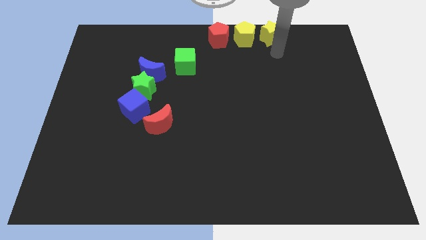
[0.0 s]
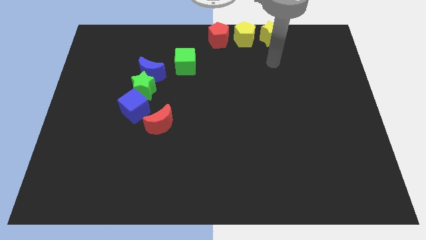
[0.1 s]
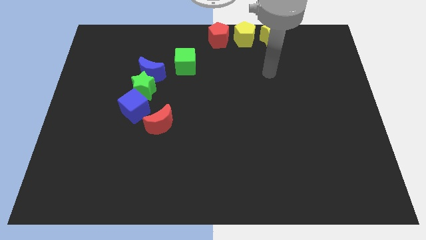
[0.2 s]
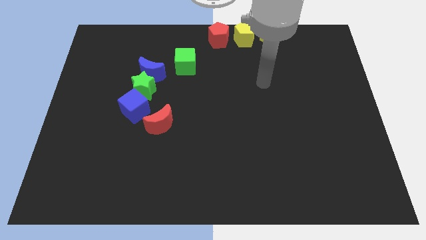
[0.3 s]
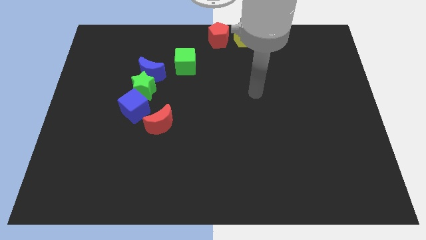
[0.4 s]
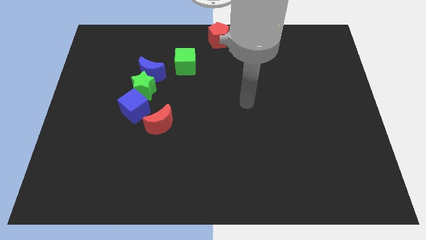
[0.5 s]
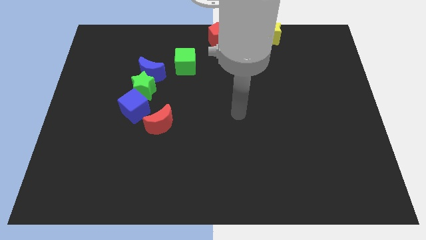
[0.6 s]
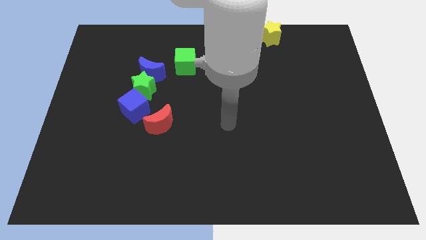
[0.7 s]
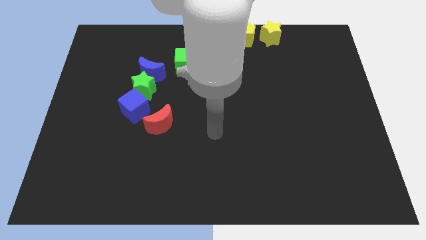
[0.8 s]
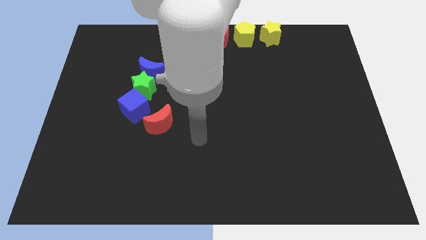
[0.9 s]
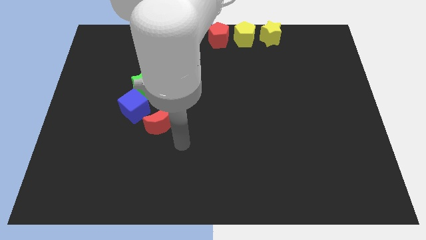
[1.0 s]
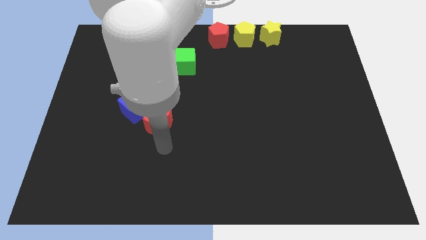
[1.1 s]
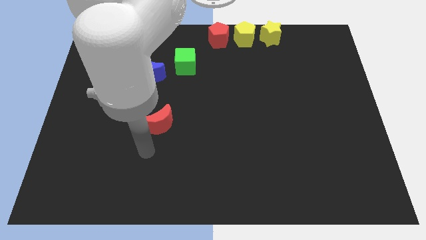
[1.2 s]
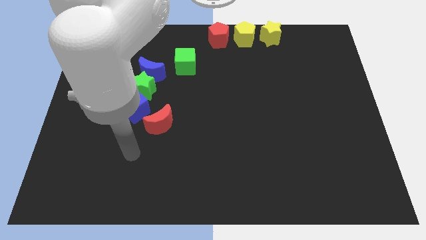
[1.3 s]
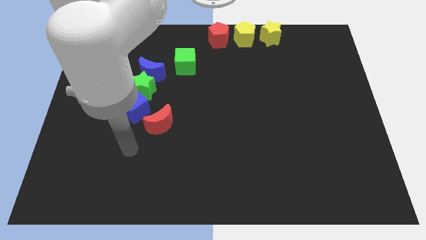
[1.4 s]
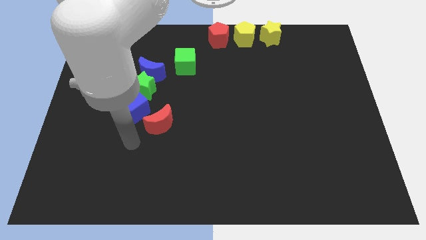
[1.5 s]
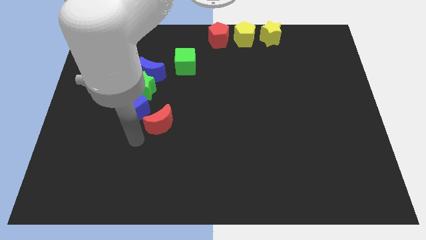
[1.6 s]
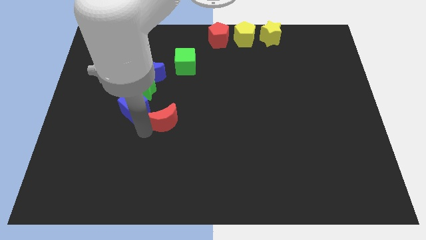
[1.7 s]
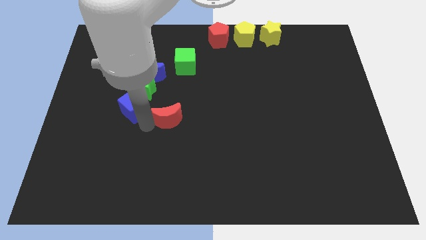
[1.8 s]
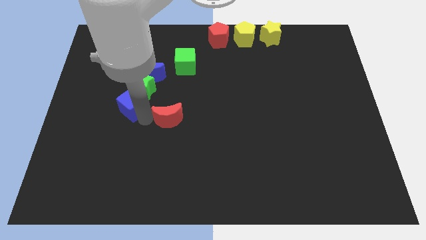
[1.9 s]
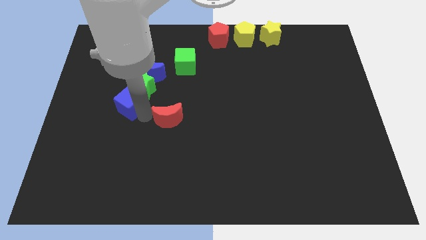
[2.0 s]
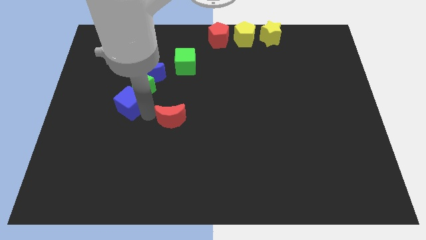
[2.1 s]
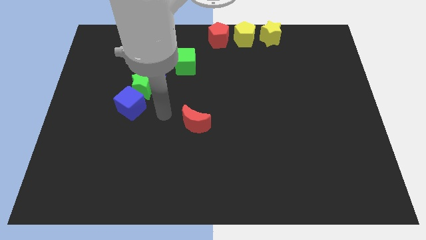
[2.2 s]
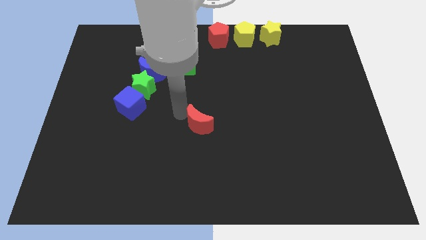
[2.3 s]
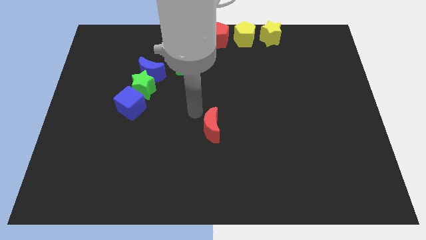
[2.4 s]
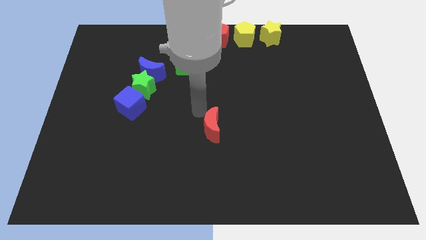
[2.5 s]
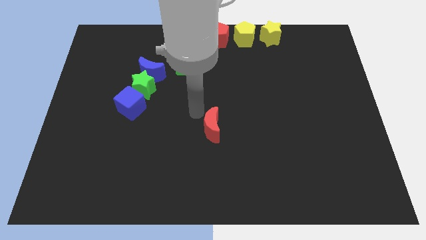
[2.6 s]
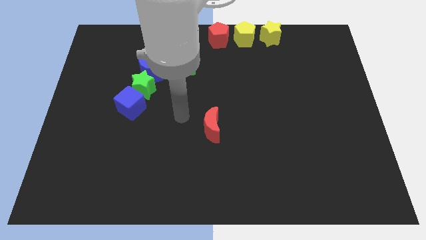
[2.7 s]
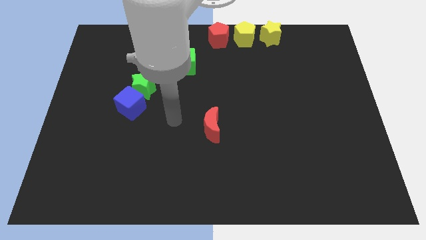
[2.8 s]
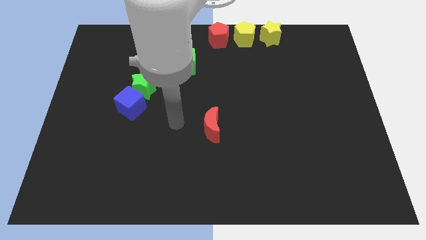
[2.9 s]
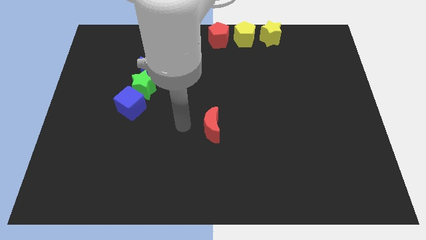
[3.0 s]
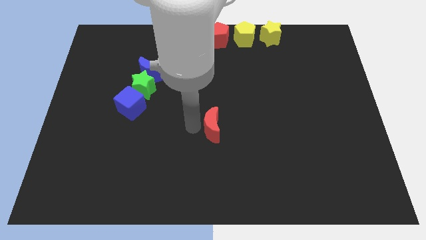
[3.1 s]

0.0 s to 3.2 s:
push the red crescent vertically to the bottom side of the red pentagon

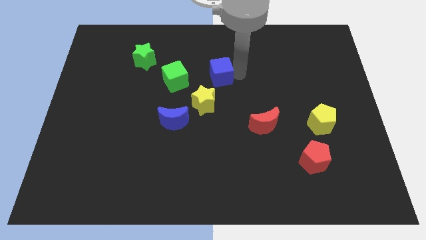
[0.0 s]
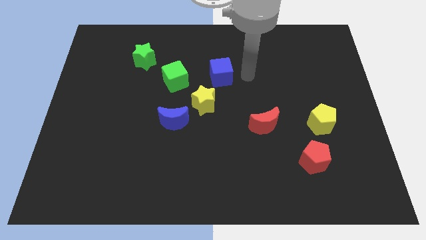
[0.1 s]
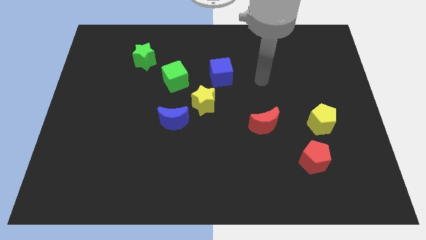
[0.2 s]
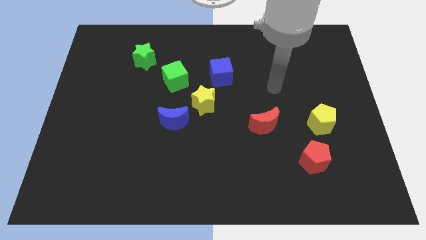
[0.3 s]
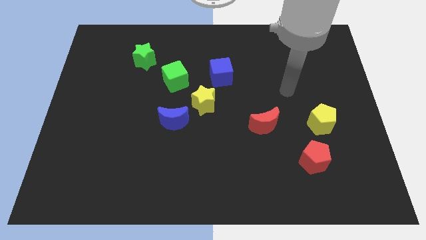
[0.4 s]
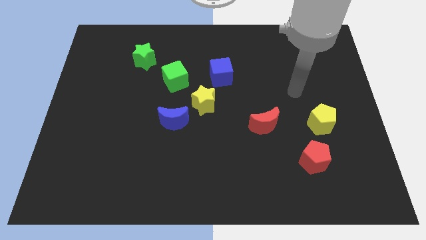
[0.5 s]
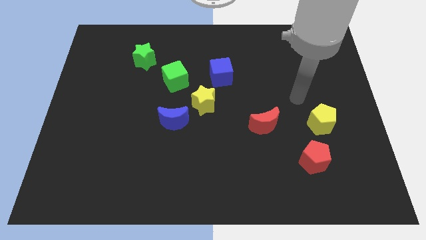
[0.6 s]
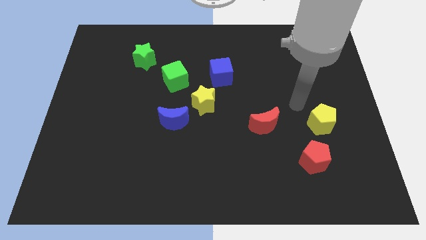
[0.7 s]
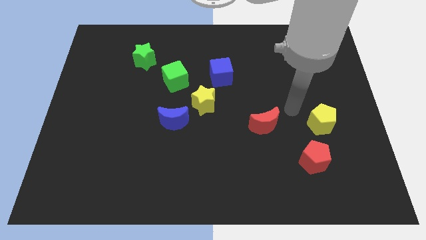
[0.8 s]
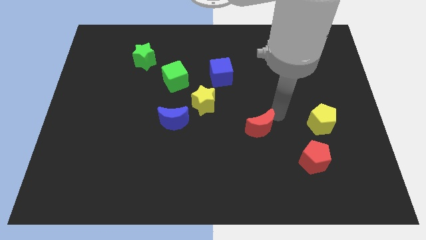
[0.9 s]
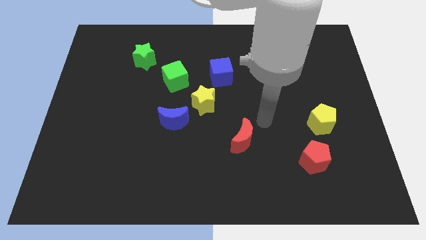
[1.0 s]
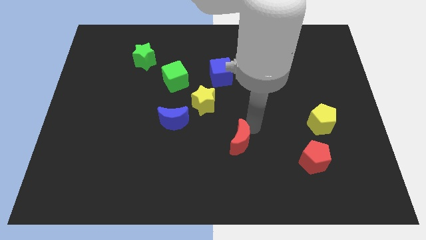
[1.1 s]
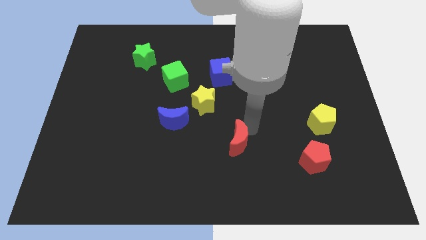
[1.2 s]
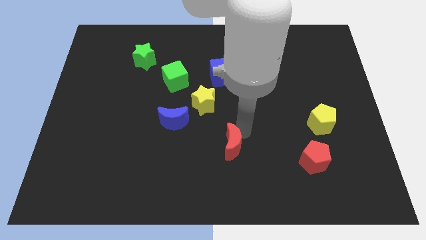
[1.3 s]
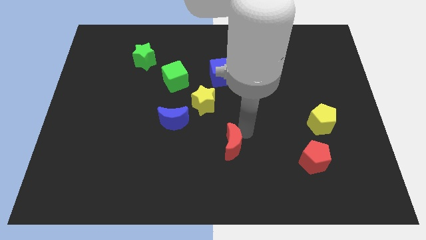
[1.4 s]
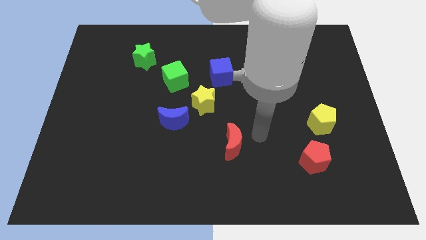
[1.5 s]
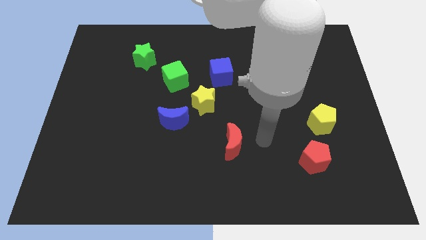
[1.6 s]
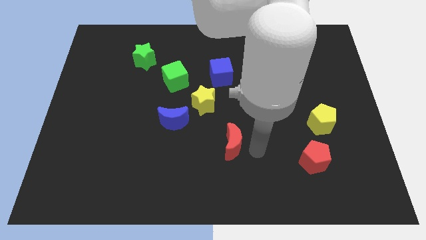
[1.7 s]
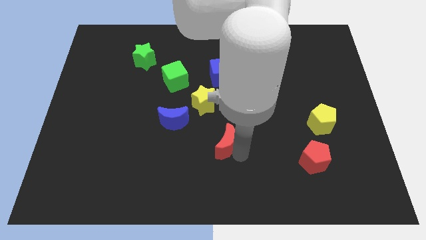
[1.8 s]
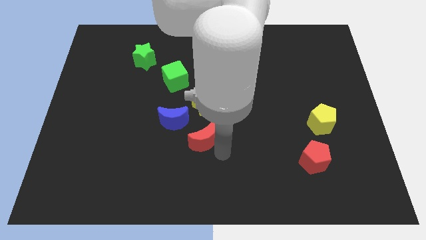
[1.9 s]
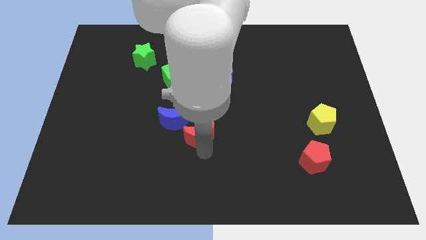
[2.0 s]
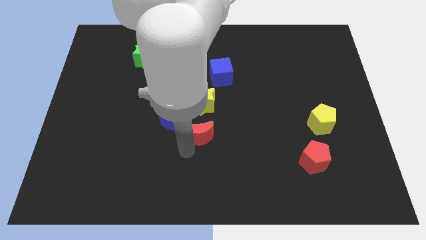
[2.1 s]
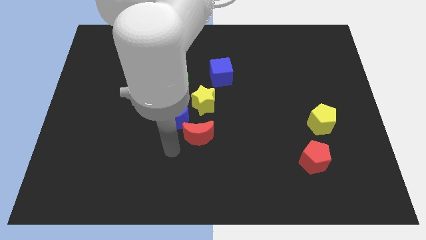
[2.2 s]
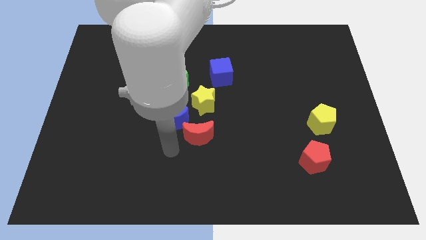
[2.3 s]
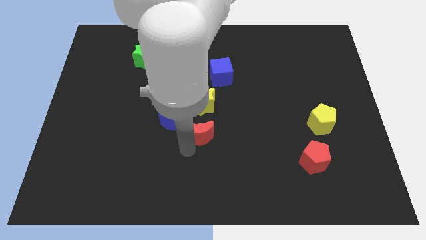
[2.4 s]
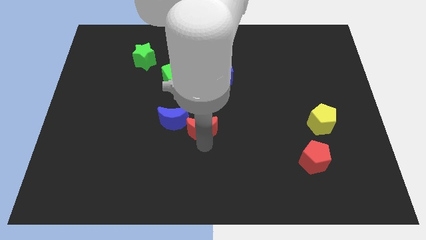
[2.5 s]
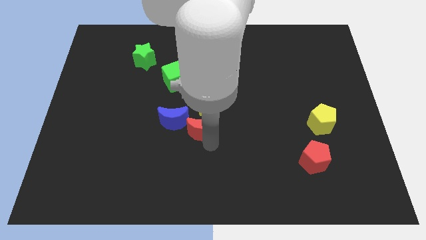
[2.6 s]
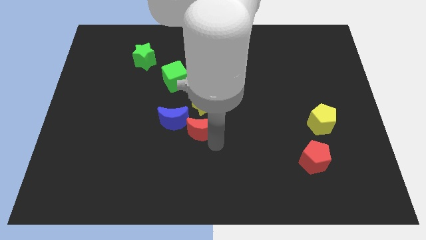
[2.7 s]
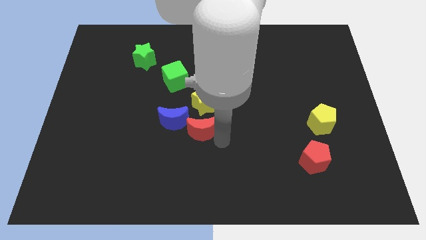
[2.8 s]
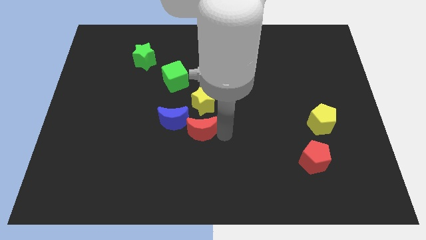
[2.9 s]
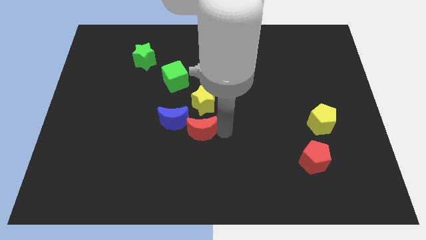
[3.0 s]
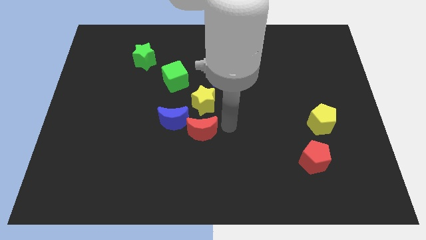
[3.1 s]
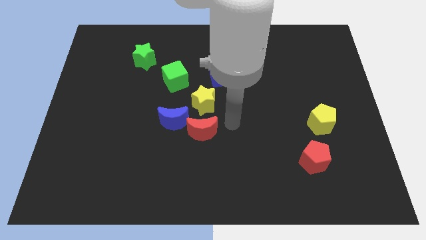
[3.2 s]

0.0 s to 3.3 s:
move the red crescent to the bottom of the yellow star

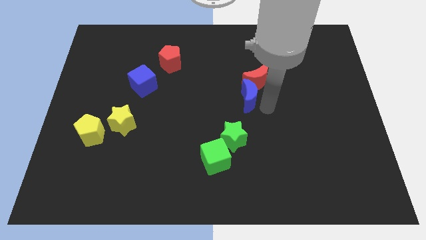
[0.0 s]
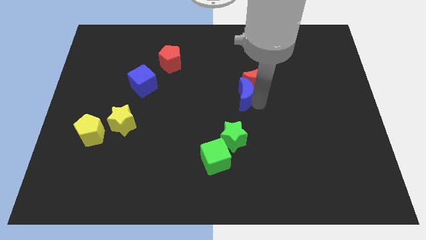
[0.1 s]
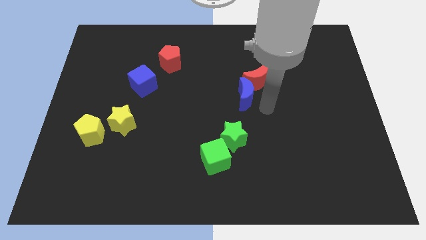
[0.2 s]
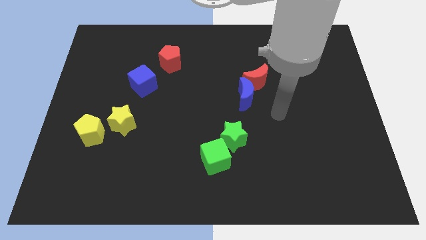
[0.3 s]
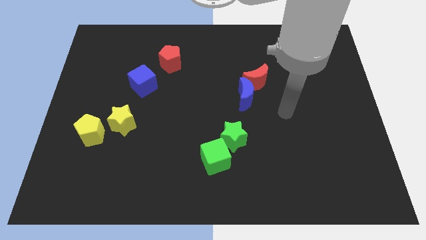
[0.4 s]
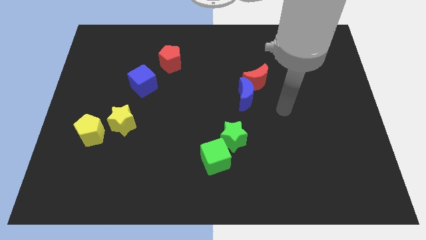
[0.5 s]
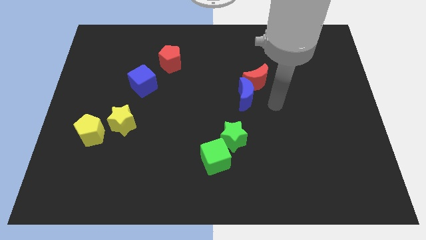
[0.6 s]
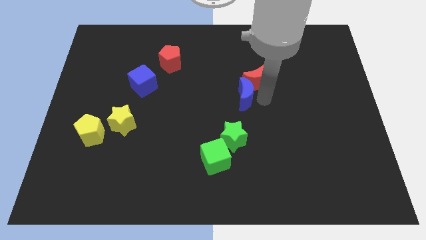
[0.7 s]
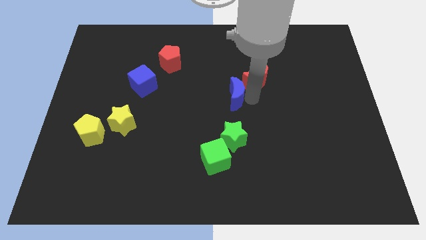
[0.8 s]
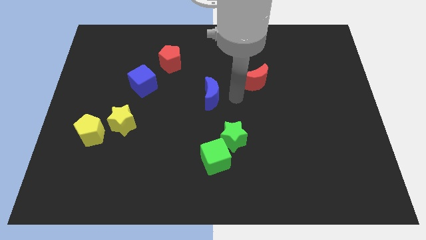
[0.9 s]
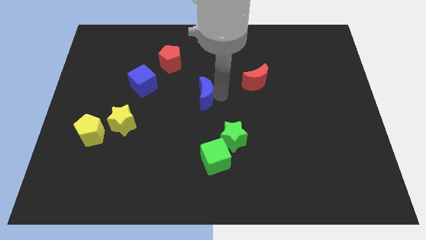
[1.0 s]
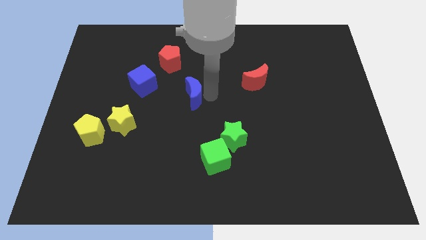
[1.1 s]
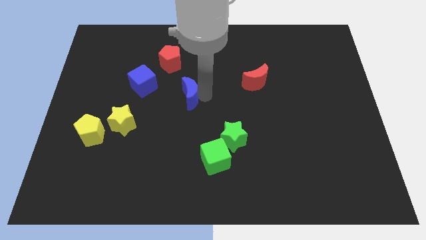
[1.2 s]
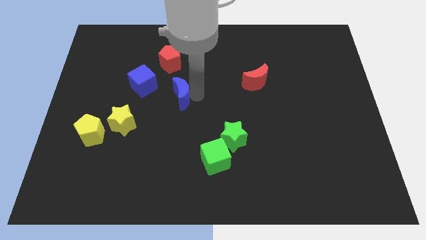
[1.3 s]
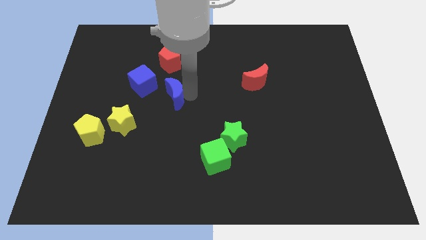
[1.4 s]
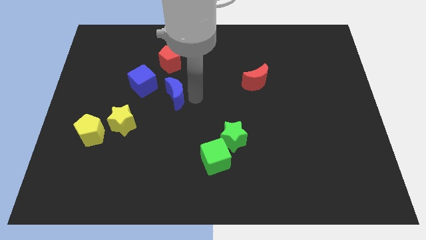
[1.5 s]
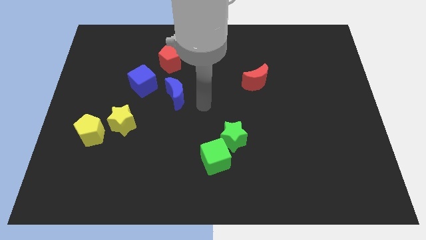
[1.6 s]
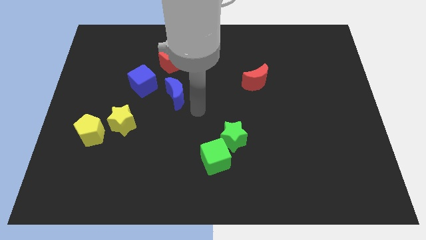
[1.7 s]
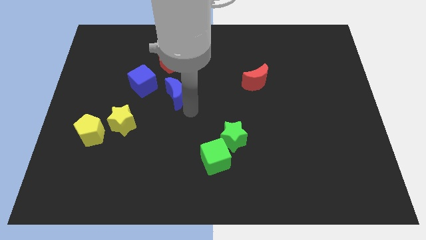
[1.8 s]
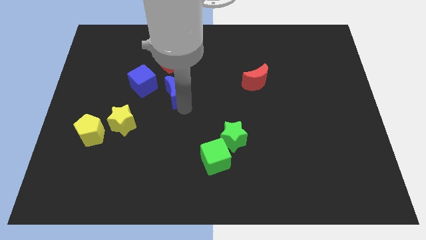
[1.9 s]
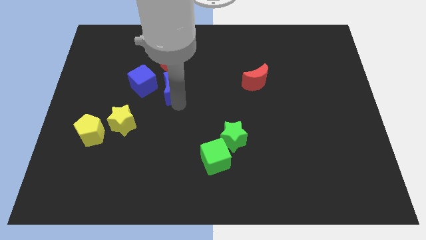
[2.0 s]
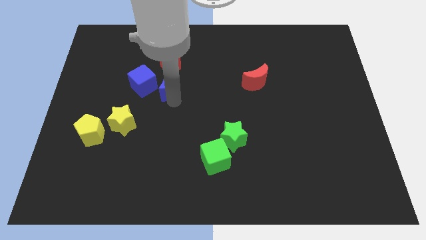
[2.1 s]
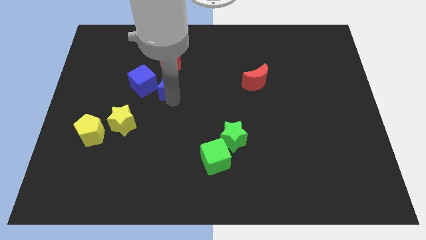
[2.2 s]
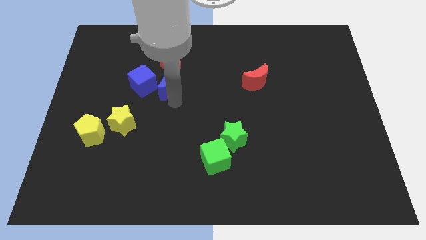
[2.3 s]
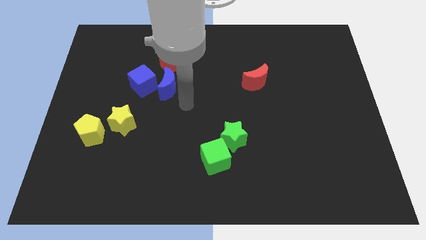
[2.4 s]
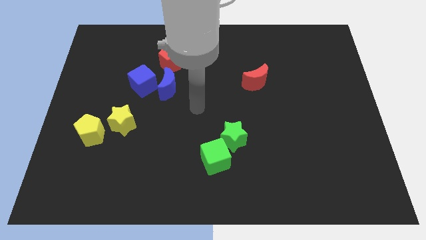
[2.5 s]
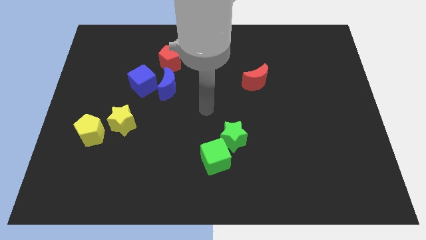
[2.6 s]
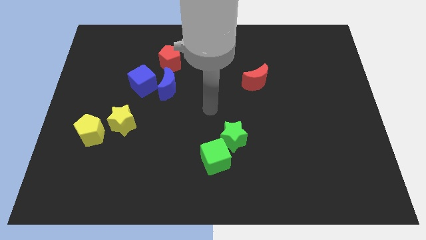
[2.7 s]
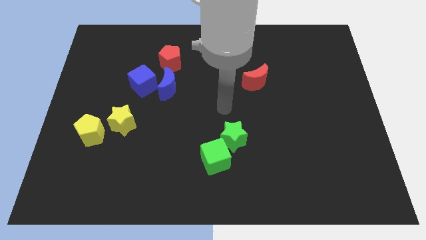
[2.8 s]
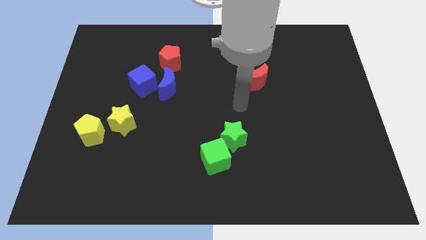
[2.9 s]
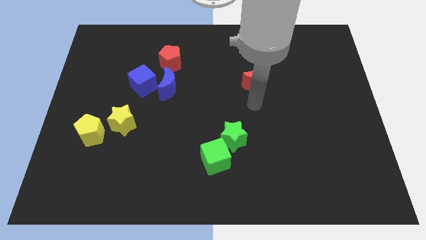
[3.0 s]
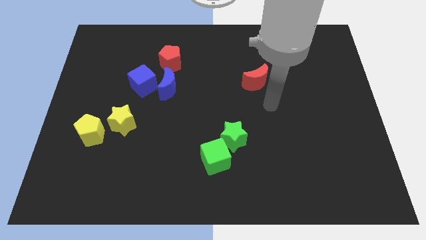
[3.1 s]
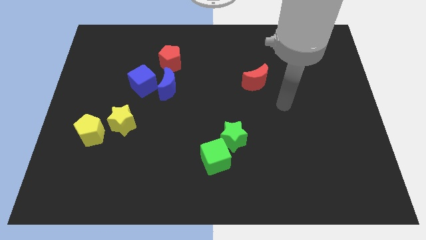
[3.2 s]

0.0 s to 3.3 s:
move the blue moon to the right side of the blue cube
